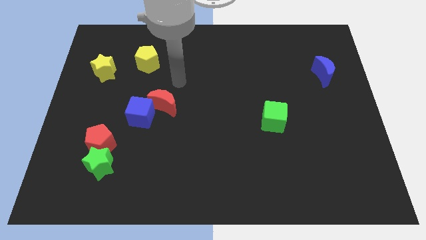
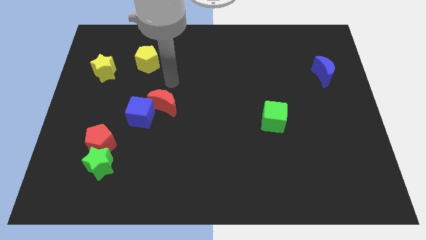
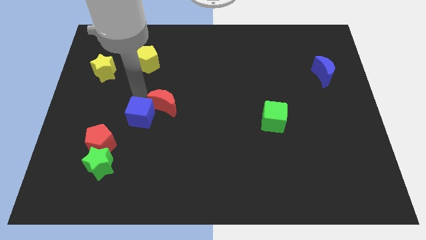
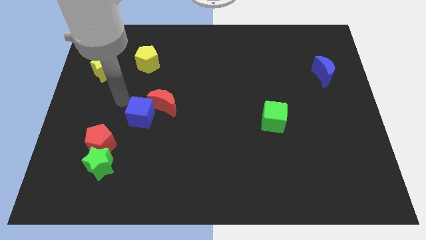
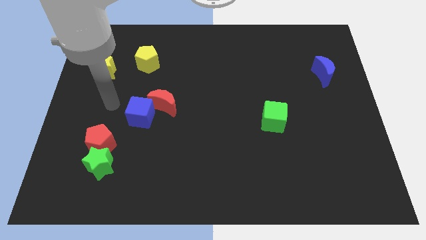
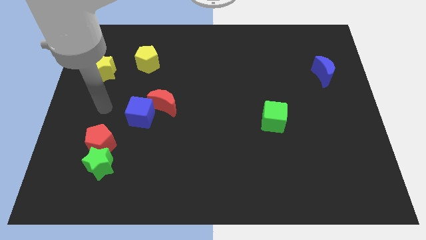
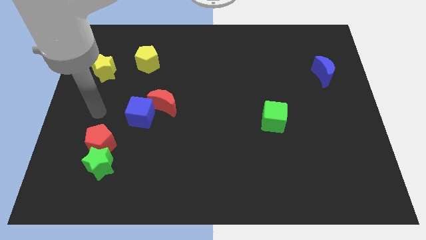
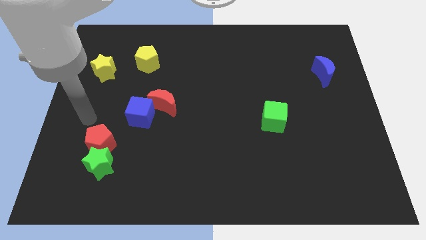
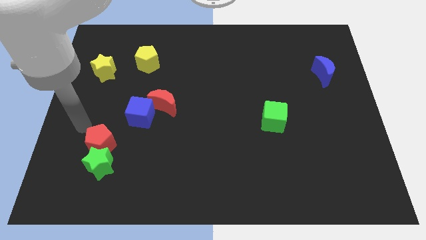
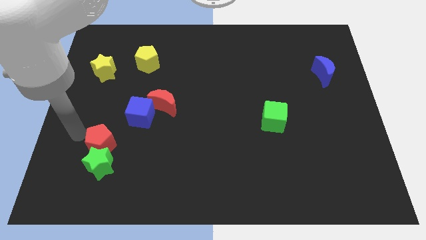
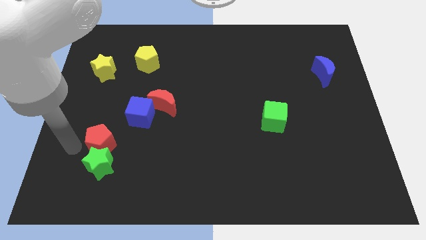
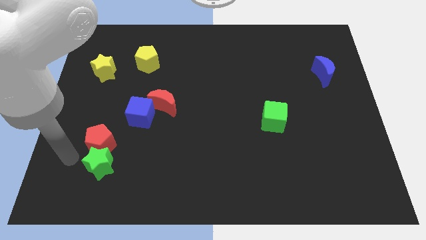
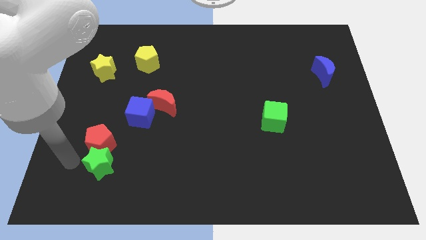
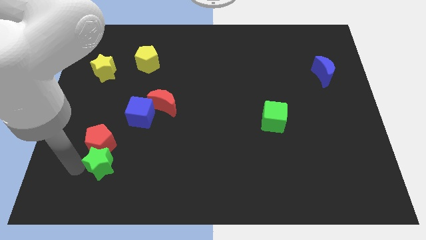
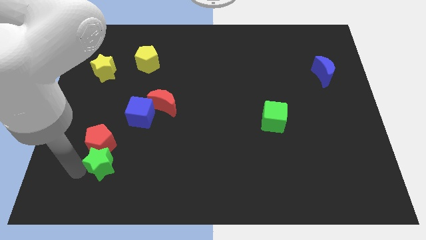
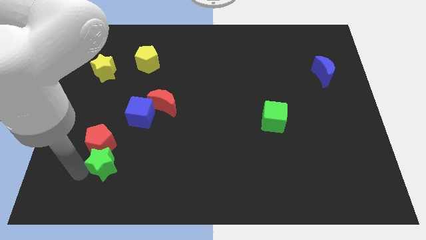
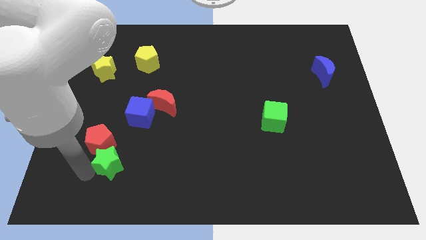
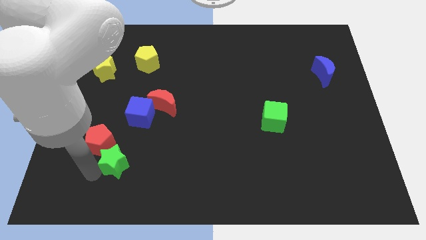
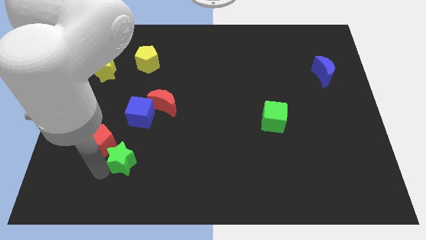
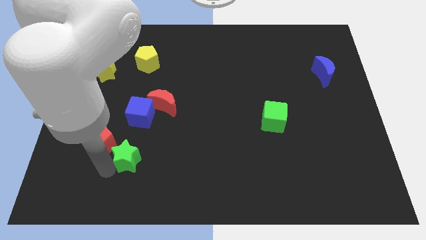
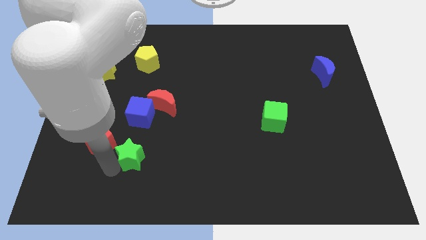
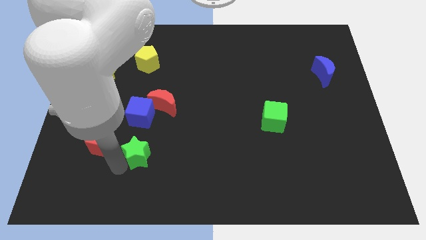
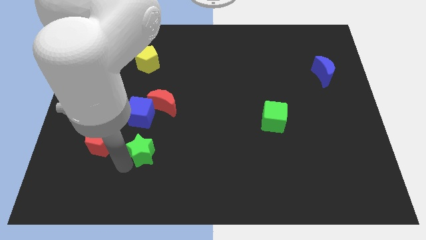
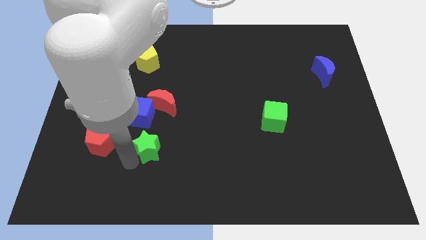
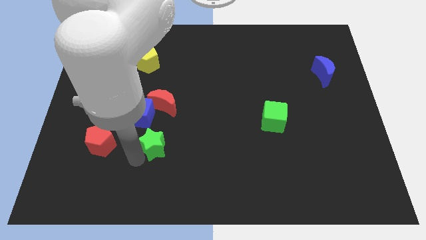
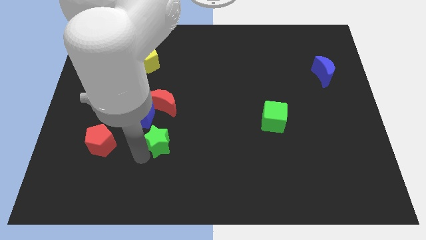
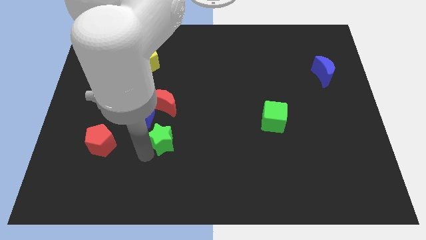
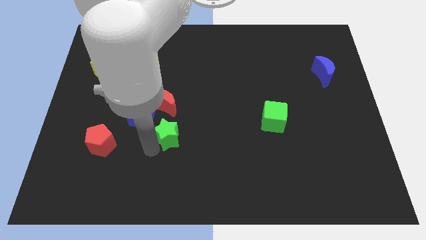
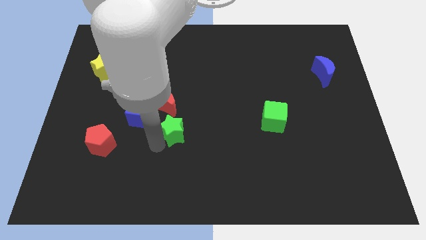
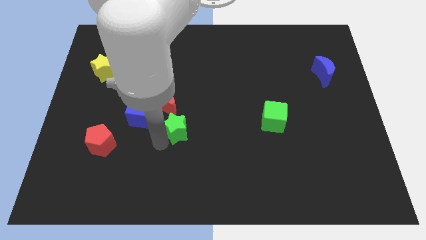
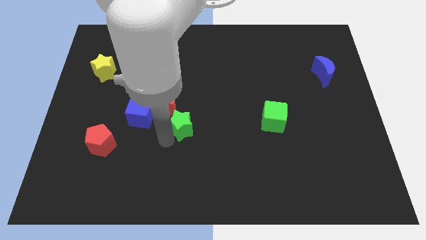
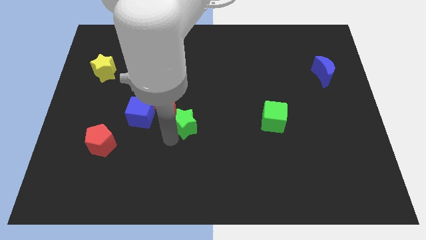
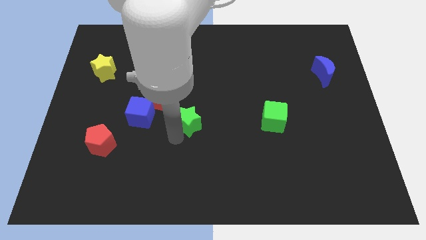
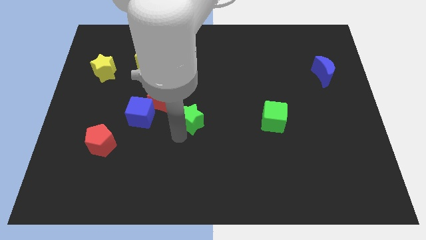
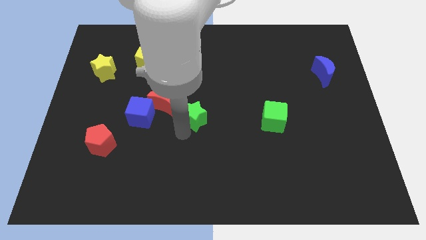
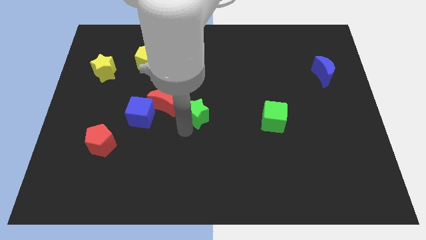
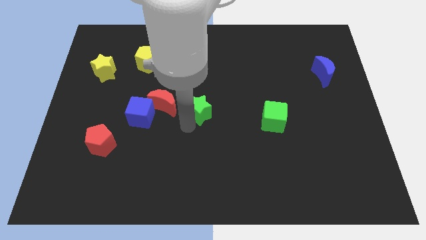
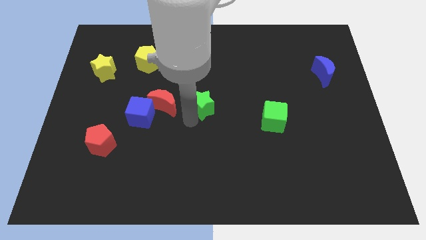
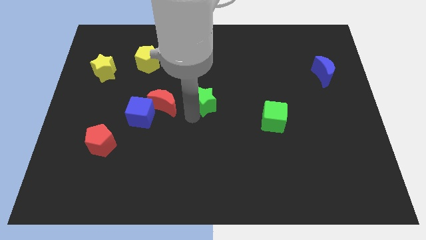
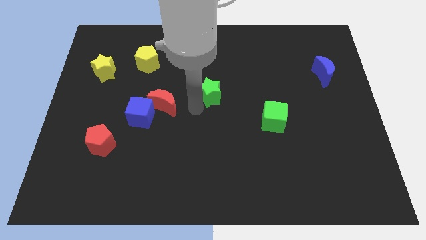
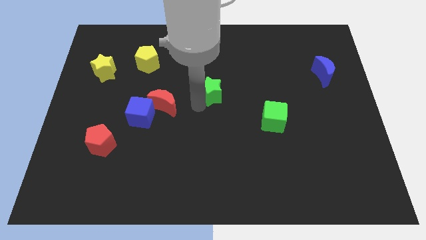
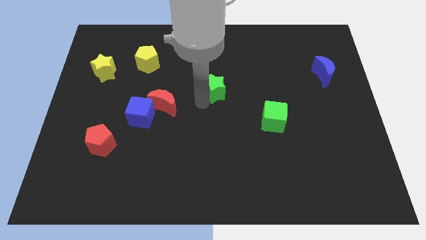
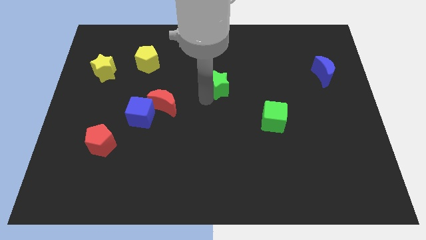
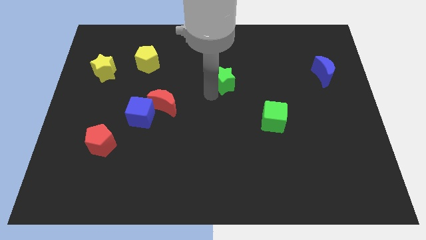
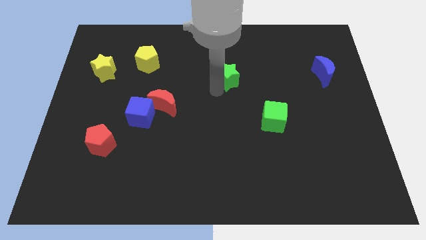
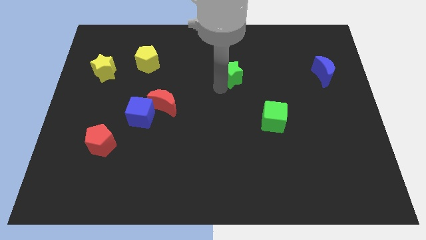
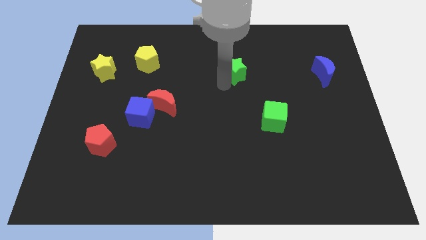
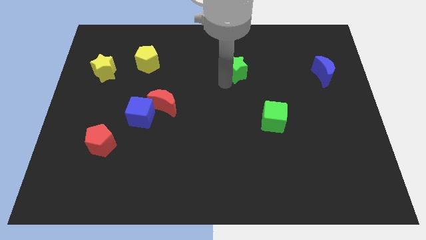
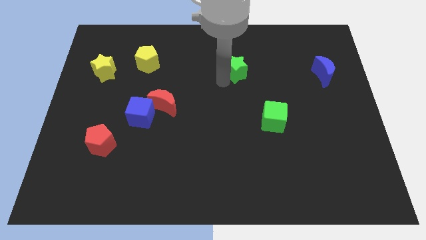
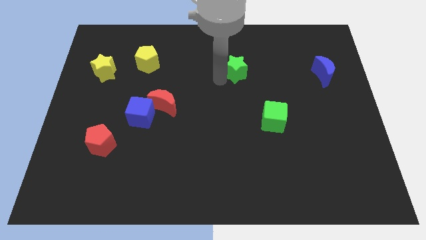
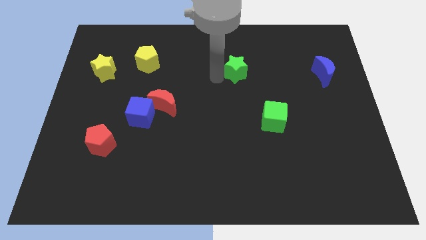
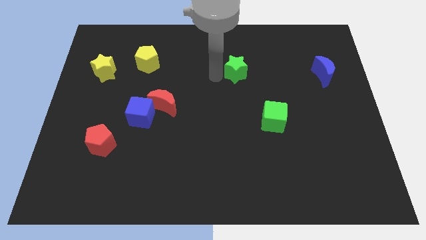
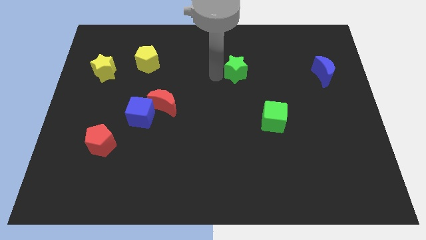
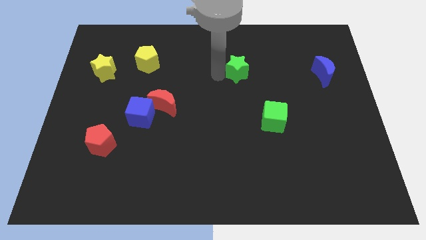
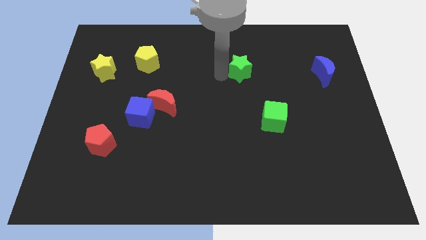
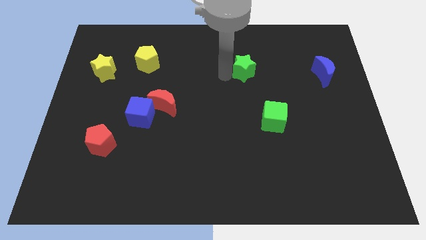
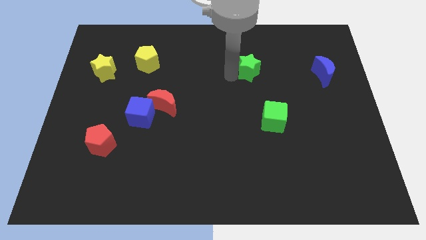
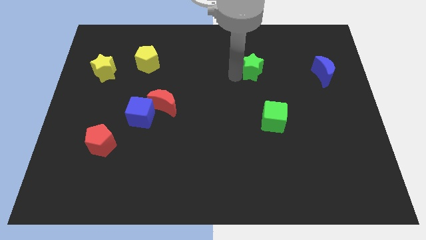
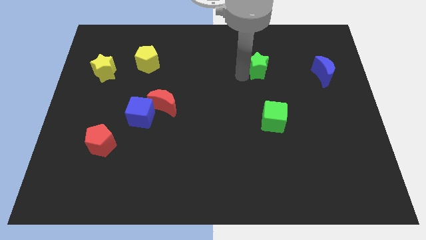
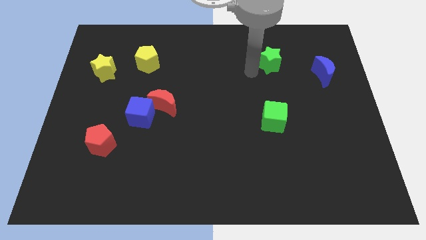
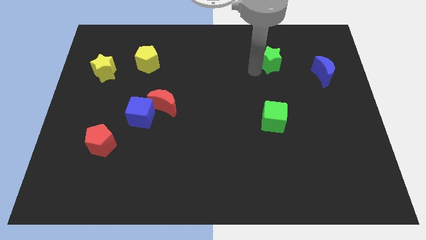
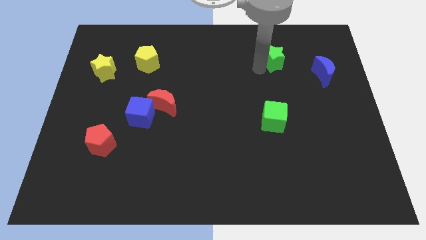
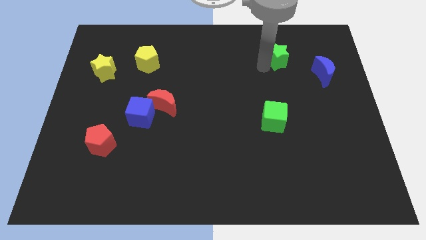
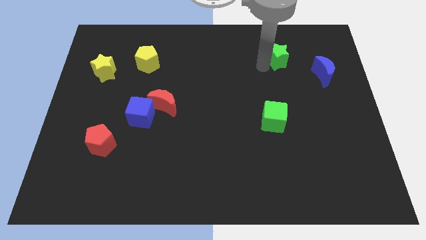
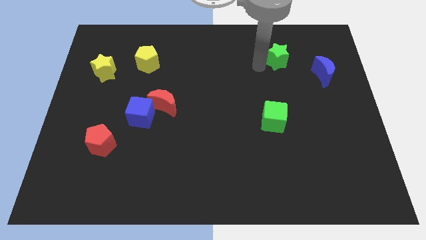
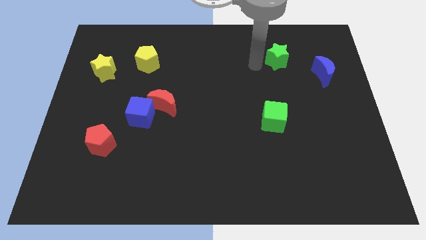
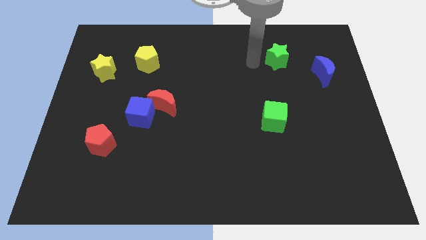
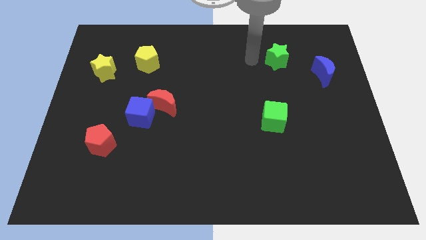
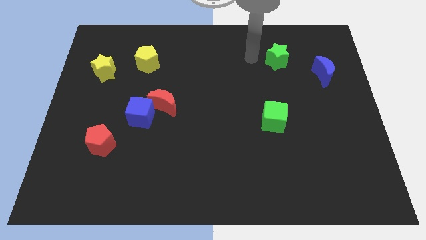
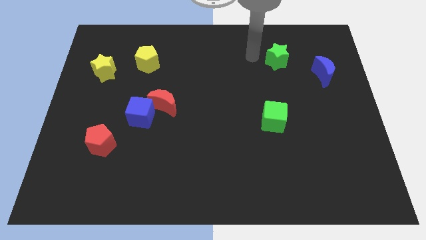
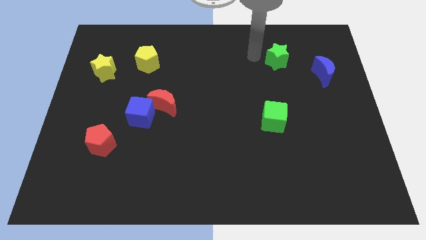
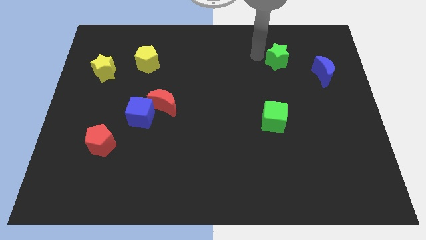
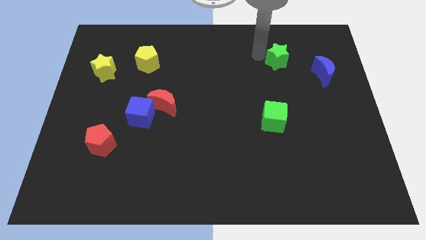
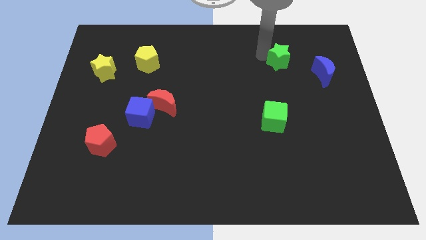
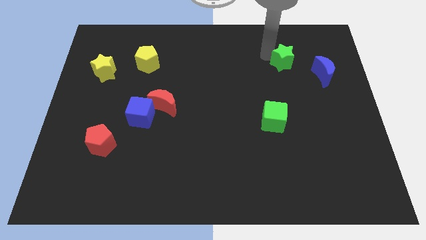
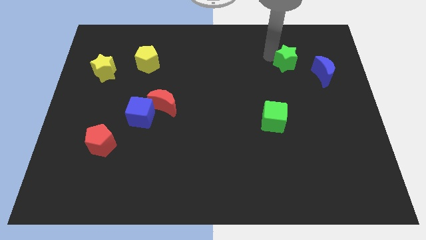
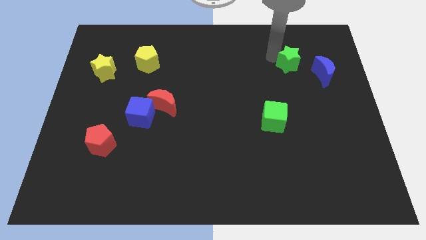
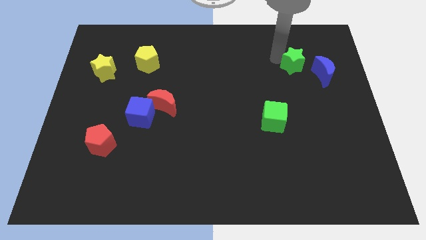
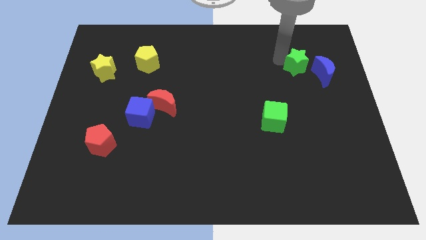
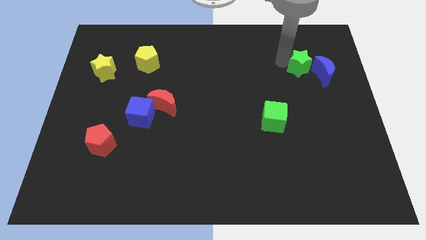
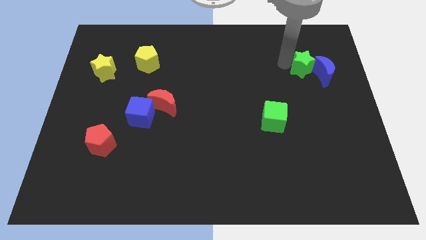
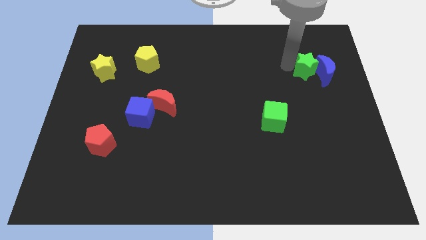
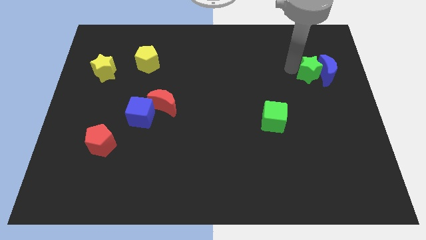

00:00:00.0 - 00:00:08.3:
move the green star to the blue moon
